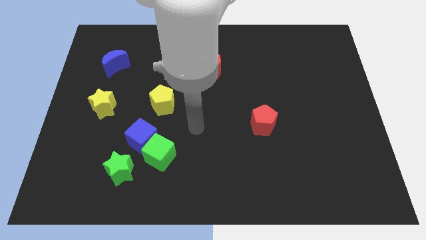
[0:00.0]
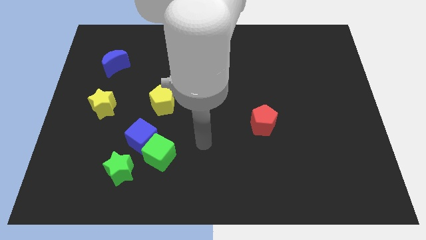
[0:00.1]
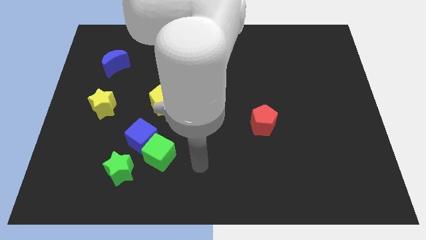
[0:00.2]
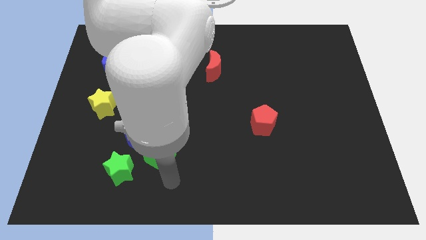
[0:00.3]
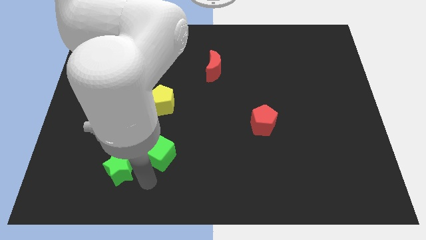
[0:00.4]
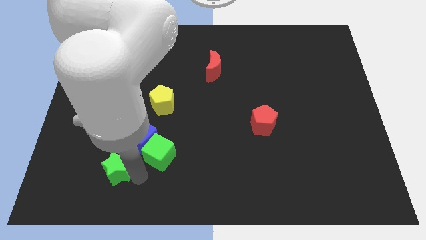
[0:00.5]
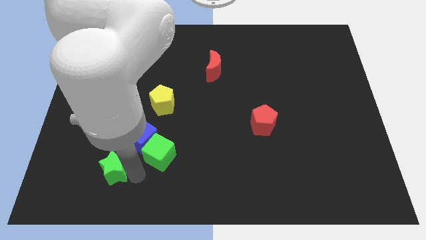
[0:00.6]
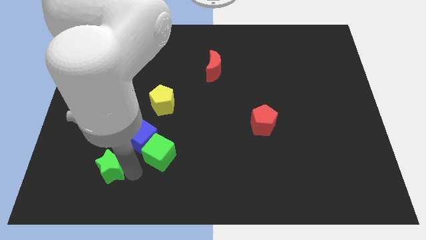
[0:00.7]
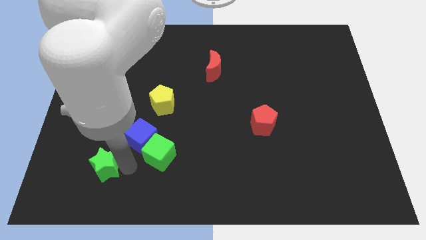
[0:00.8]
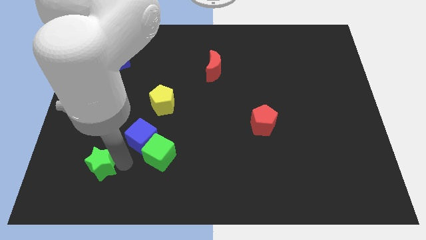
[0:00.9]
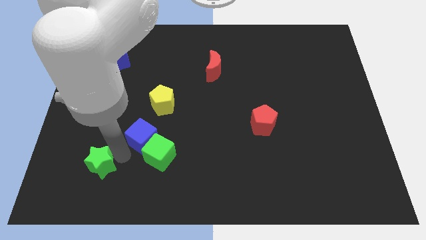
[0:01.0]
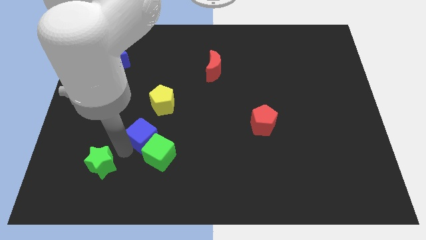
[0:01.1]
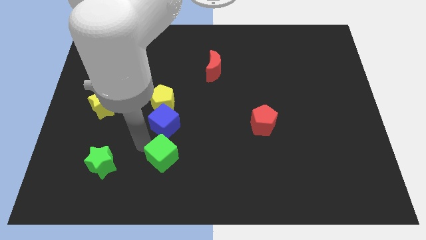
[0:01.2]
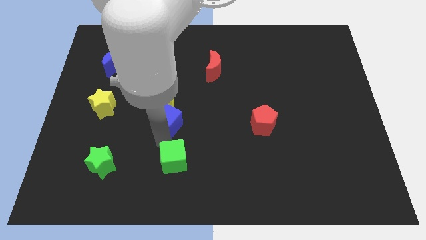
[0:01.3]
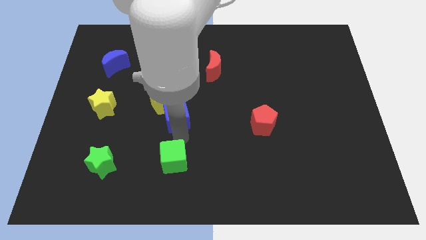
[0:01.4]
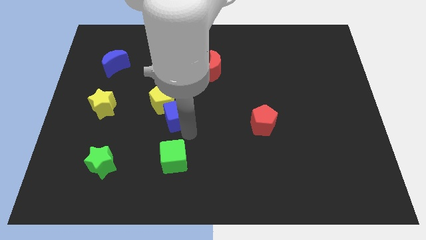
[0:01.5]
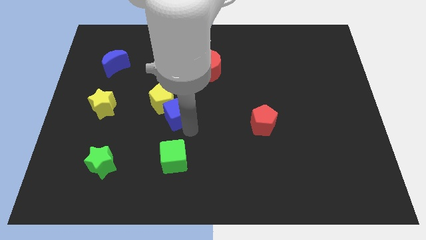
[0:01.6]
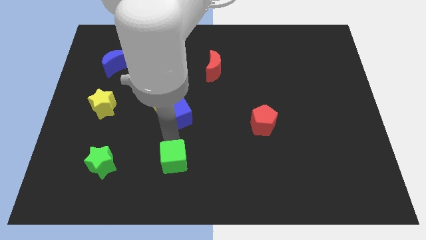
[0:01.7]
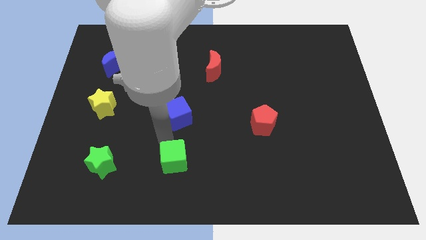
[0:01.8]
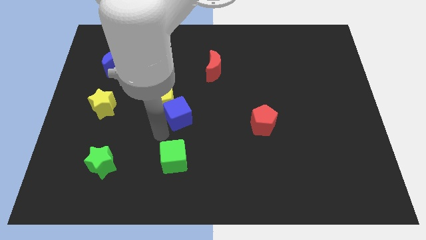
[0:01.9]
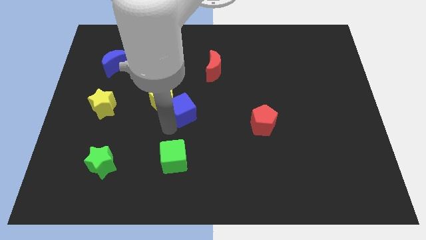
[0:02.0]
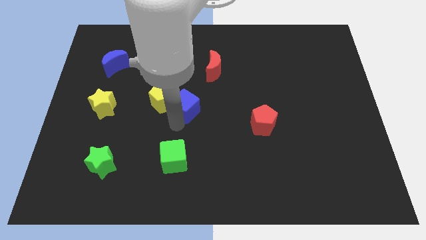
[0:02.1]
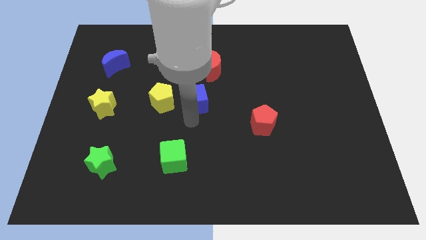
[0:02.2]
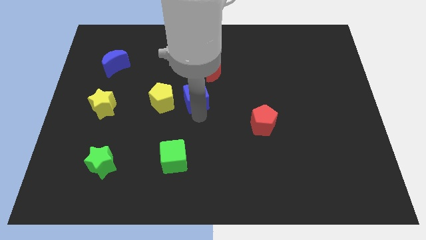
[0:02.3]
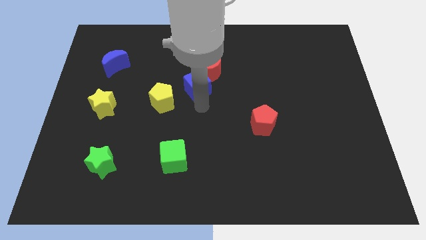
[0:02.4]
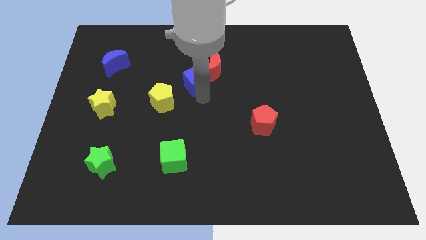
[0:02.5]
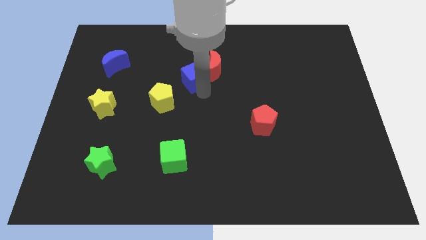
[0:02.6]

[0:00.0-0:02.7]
push the blue cube to the red moon

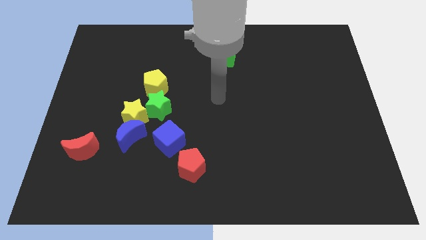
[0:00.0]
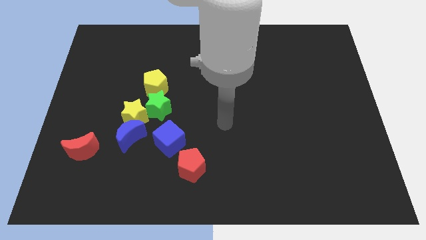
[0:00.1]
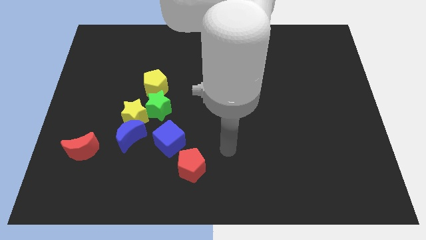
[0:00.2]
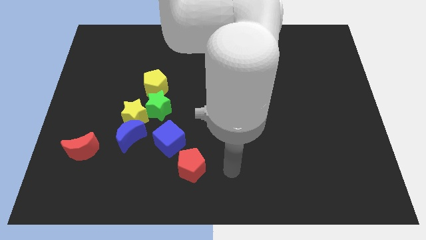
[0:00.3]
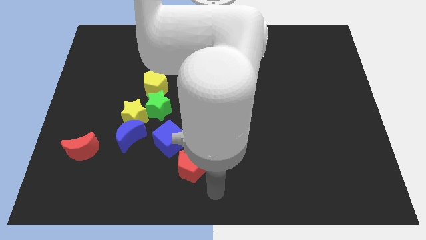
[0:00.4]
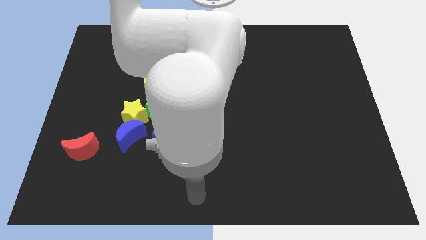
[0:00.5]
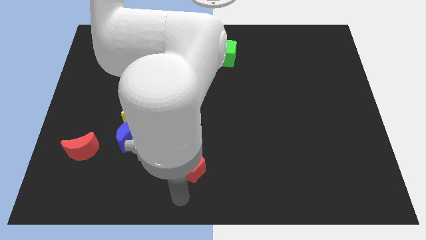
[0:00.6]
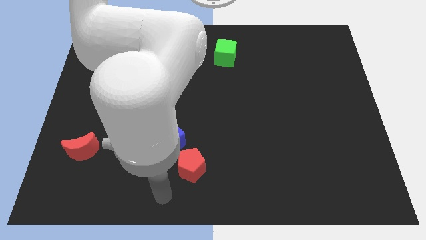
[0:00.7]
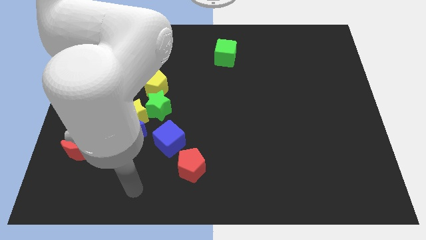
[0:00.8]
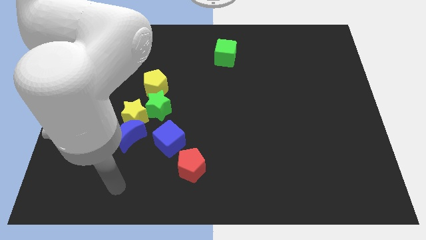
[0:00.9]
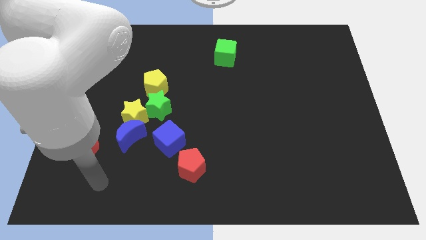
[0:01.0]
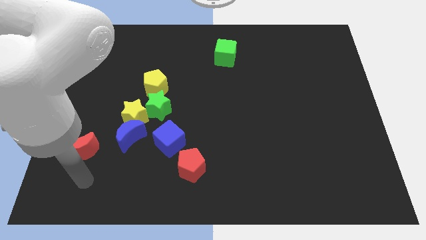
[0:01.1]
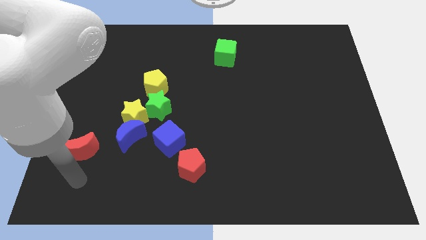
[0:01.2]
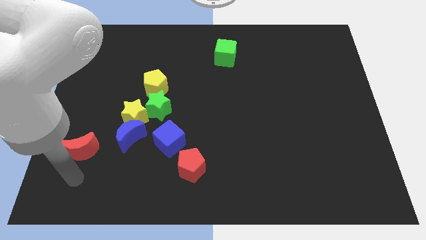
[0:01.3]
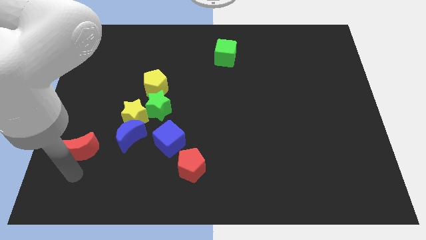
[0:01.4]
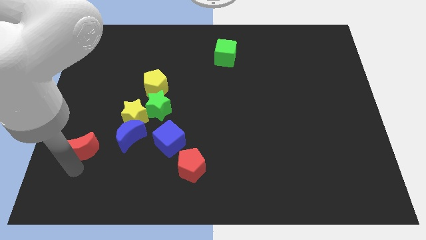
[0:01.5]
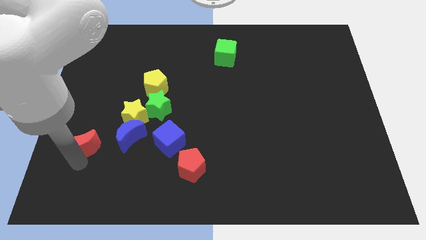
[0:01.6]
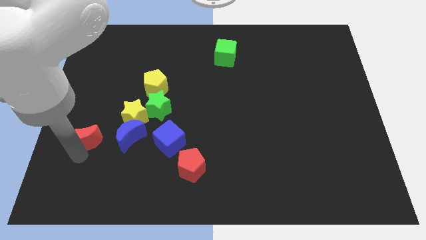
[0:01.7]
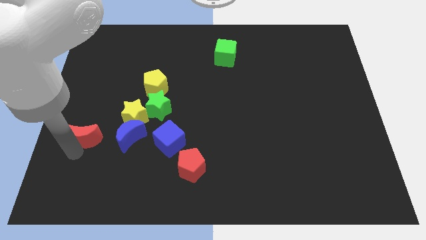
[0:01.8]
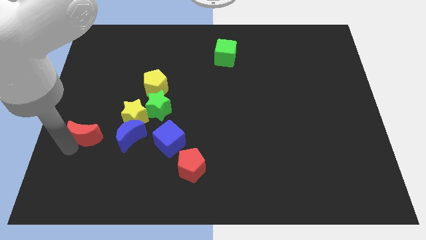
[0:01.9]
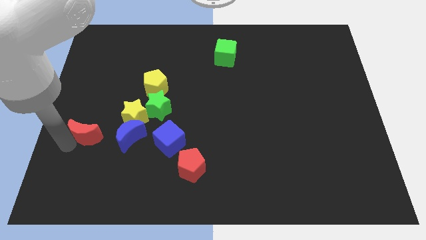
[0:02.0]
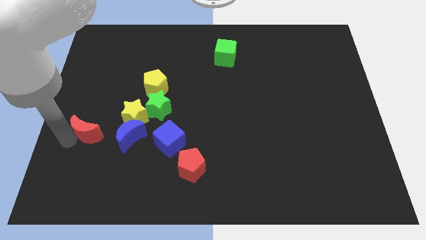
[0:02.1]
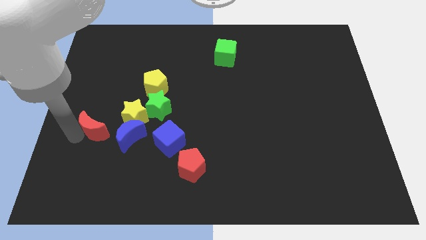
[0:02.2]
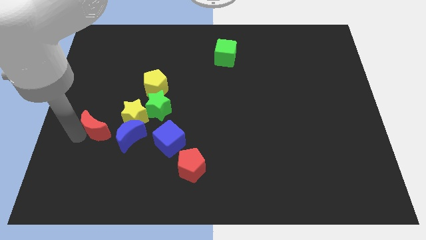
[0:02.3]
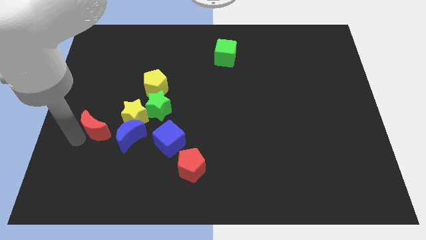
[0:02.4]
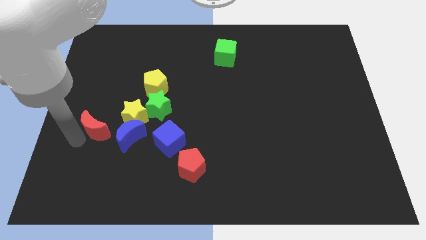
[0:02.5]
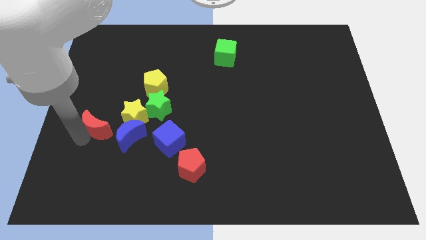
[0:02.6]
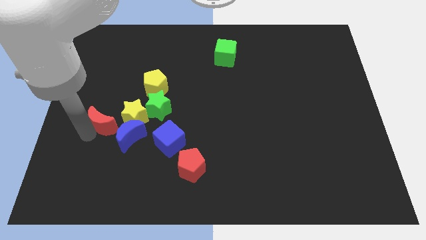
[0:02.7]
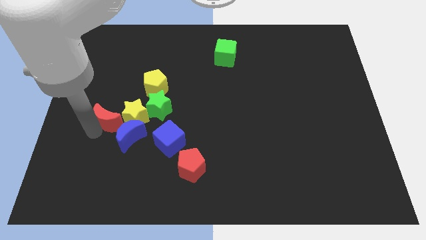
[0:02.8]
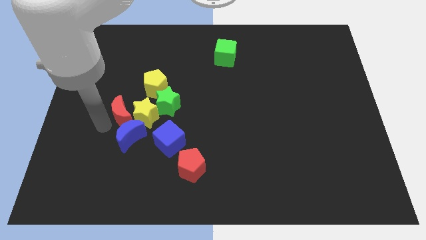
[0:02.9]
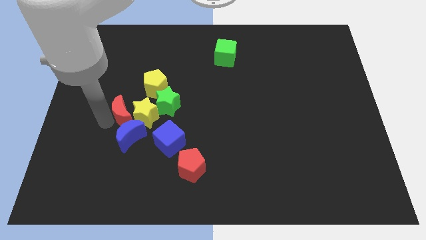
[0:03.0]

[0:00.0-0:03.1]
slide the red moon towards the yellow star

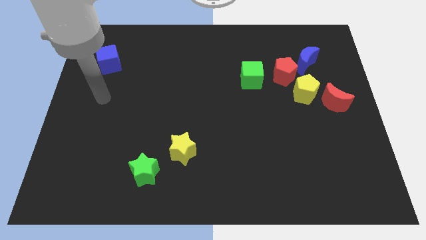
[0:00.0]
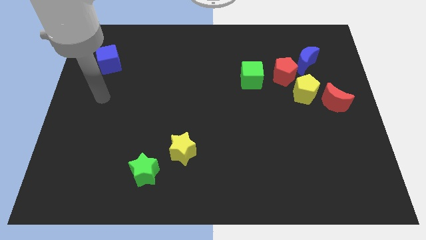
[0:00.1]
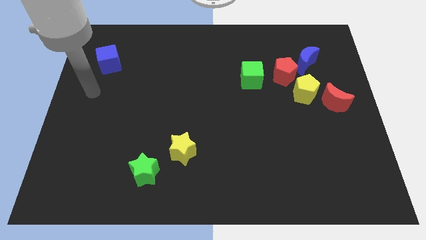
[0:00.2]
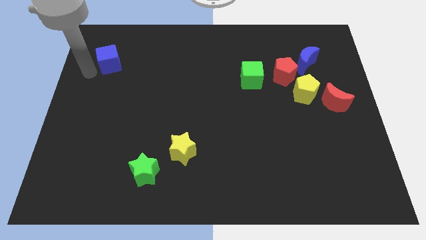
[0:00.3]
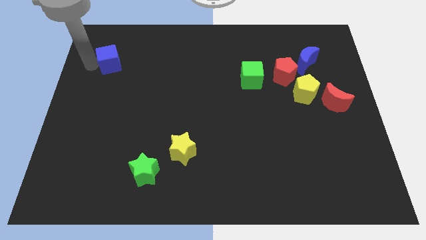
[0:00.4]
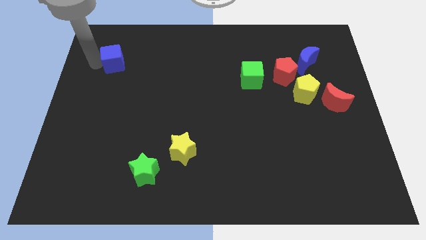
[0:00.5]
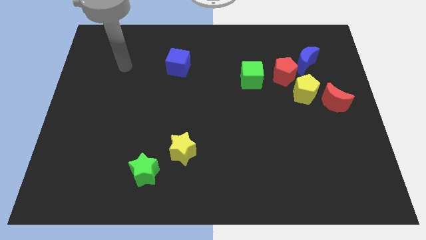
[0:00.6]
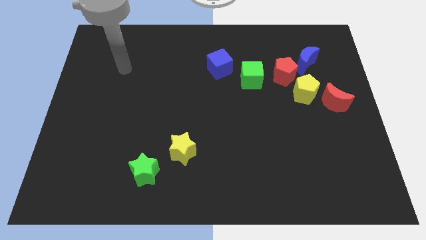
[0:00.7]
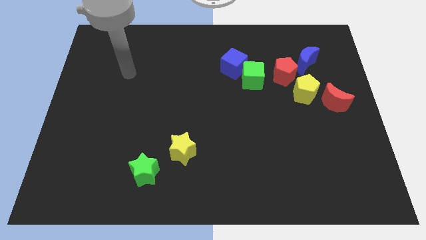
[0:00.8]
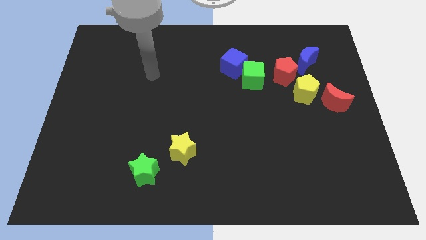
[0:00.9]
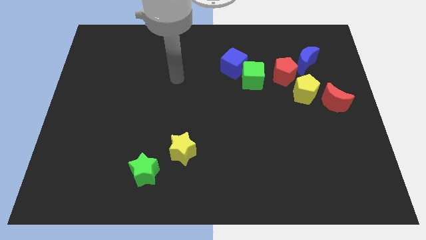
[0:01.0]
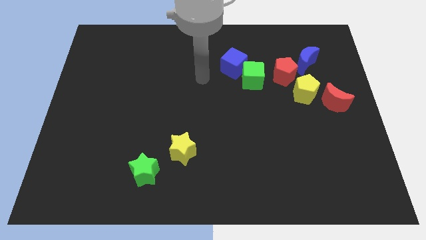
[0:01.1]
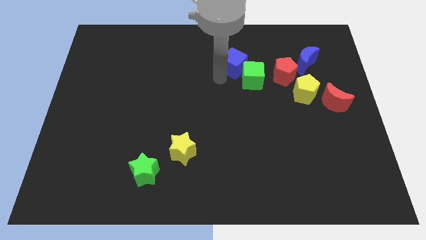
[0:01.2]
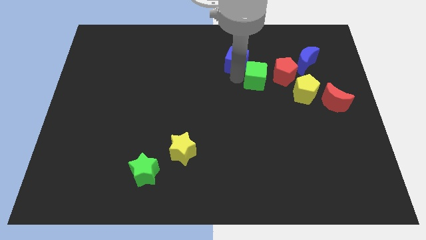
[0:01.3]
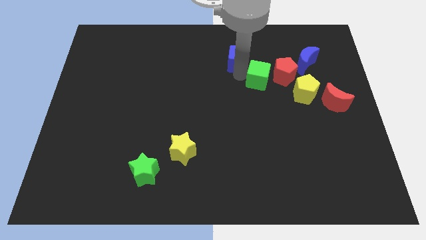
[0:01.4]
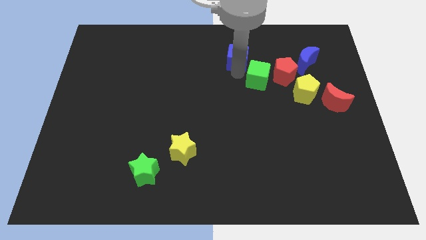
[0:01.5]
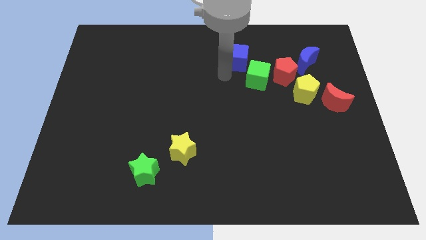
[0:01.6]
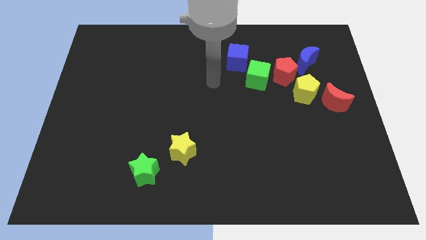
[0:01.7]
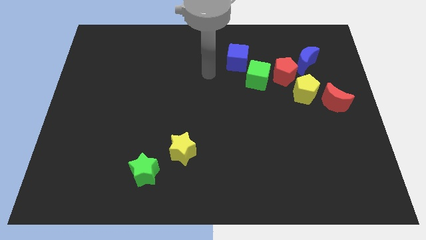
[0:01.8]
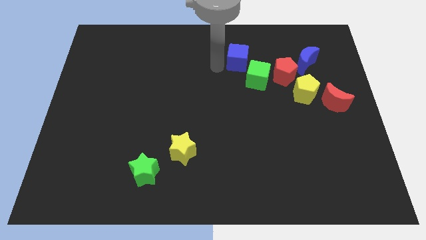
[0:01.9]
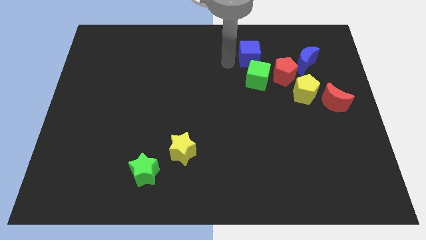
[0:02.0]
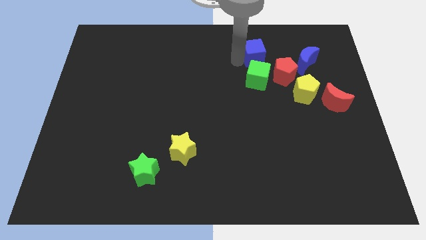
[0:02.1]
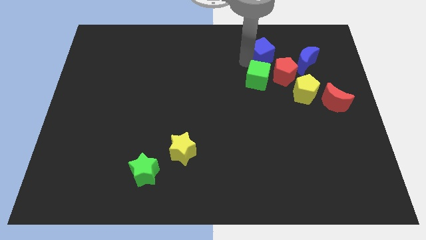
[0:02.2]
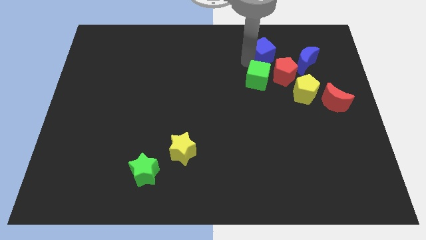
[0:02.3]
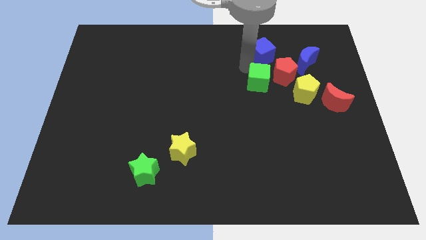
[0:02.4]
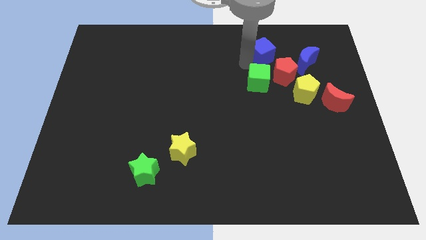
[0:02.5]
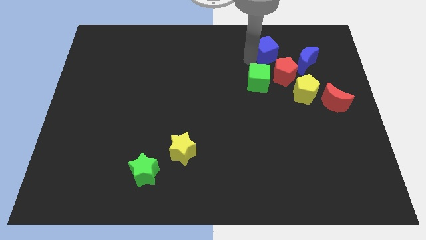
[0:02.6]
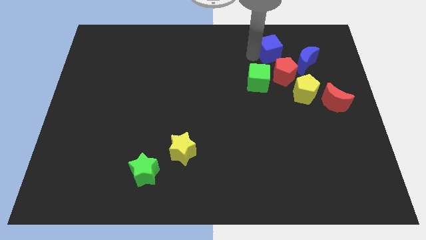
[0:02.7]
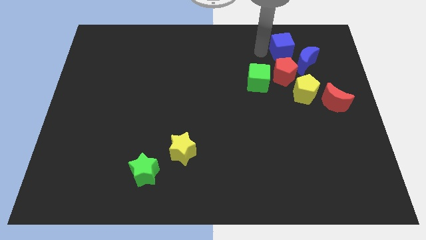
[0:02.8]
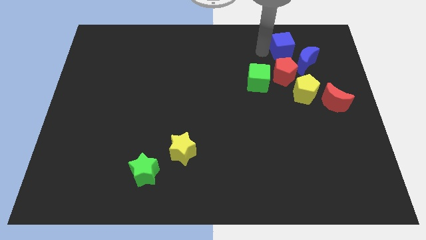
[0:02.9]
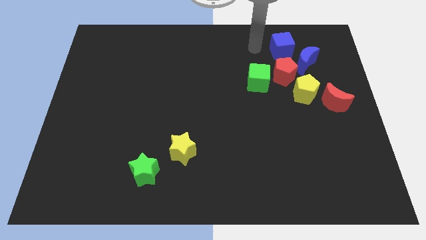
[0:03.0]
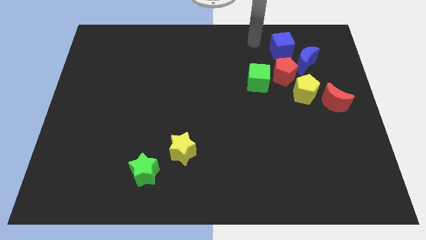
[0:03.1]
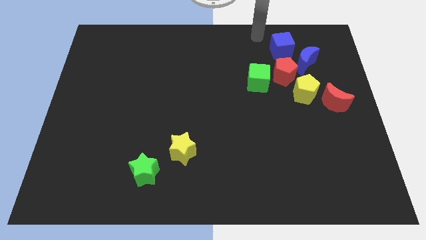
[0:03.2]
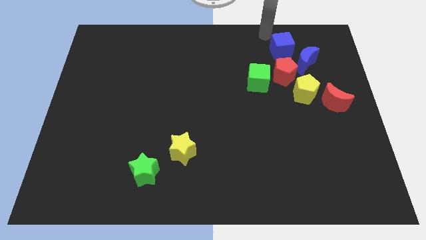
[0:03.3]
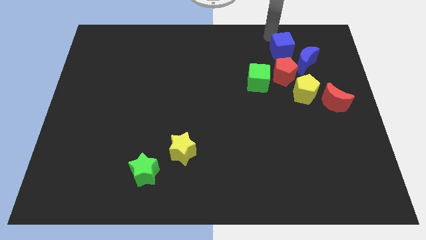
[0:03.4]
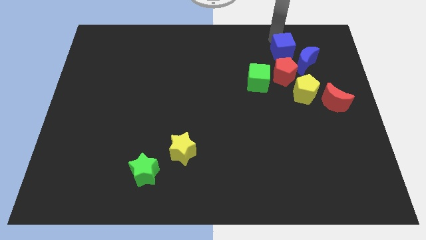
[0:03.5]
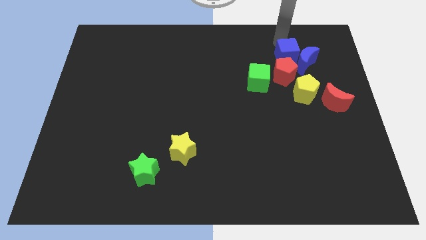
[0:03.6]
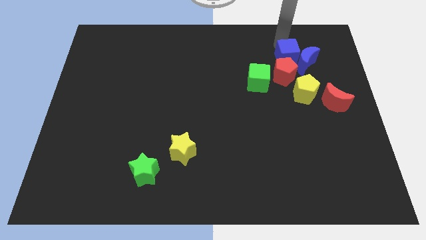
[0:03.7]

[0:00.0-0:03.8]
slide the blue cube towards the blue moon
